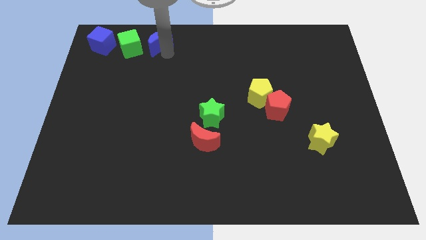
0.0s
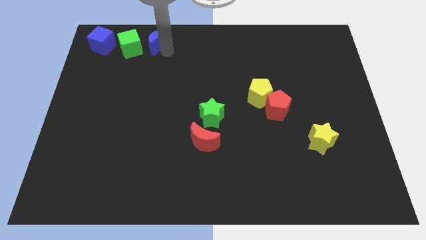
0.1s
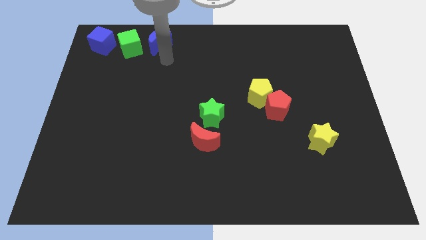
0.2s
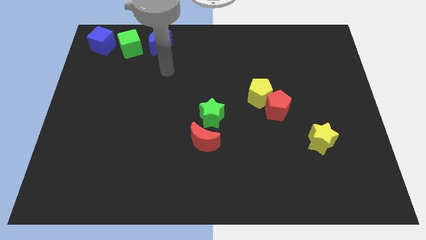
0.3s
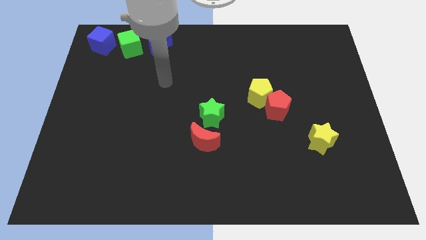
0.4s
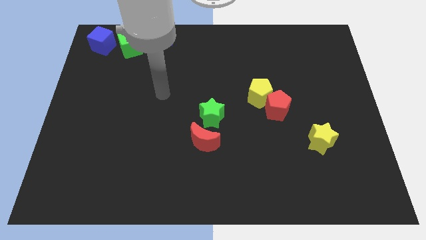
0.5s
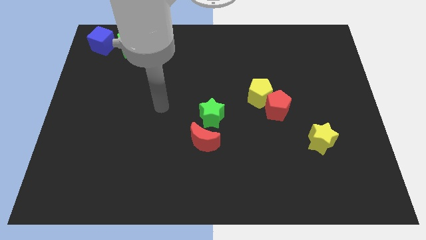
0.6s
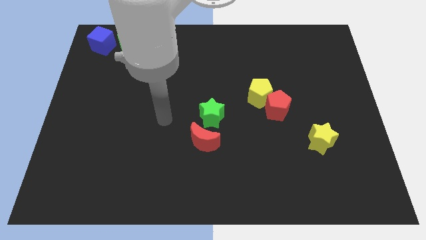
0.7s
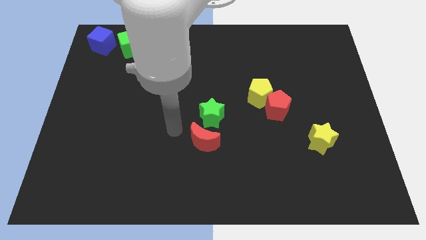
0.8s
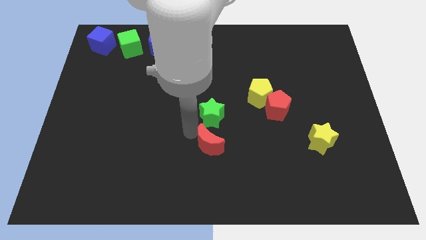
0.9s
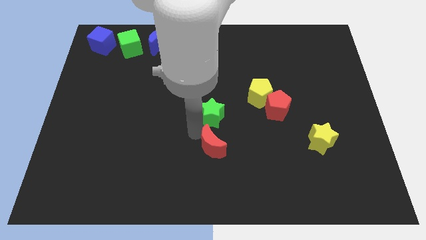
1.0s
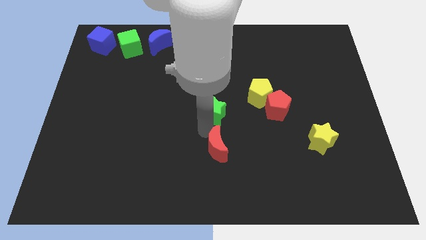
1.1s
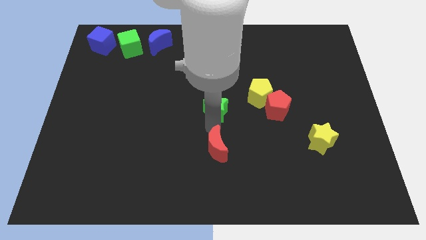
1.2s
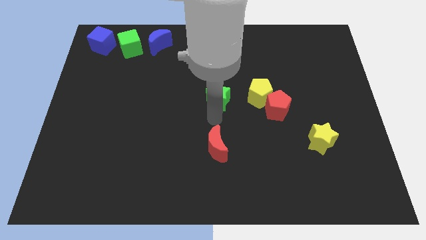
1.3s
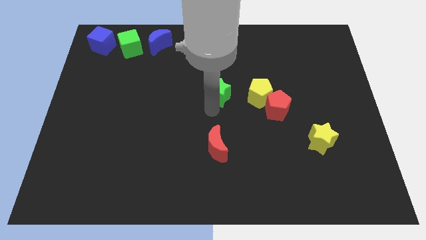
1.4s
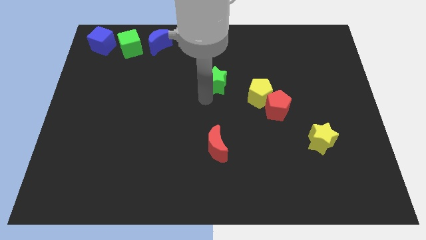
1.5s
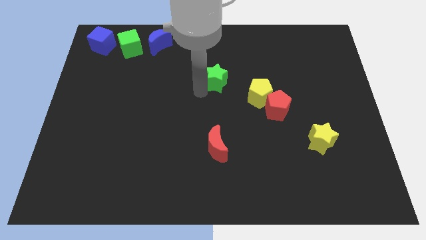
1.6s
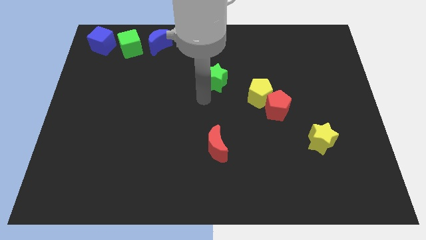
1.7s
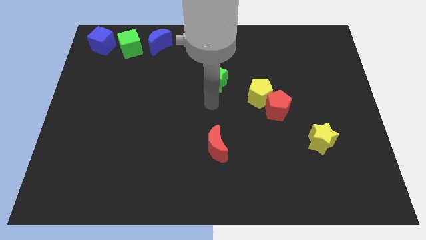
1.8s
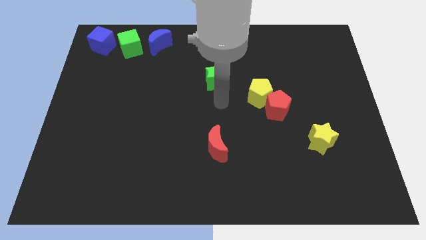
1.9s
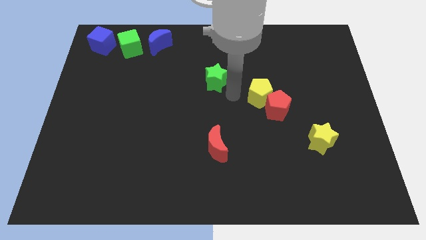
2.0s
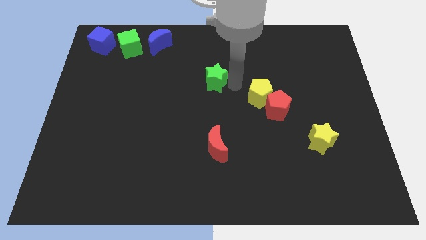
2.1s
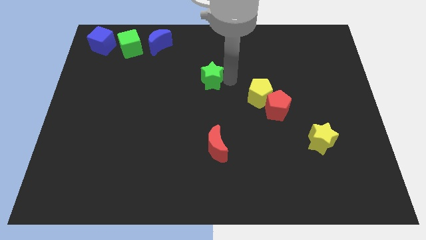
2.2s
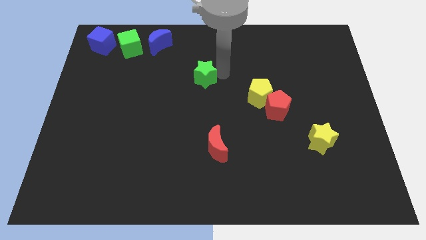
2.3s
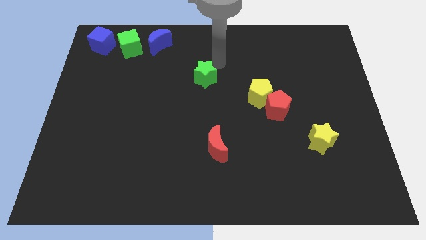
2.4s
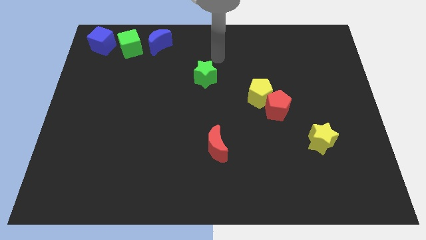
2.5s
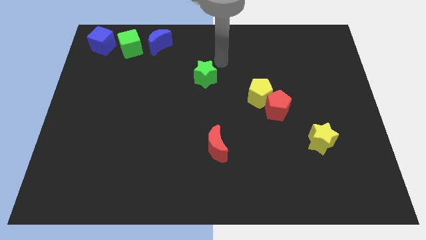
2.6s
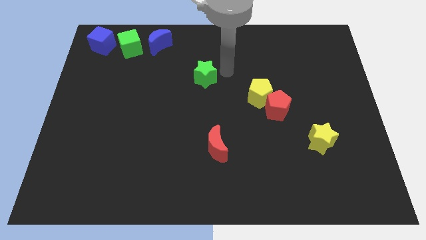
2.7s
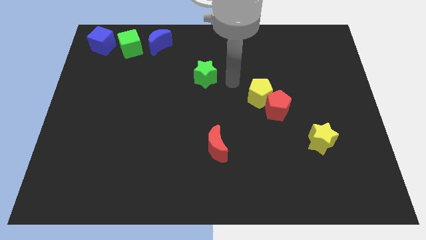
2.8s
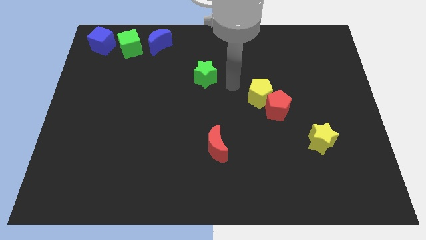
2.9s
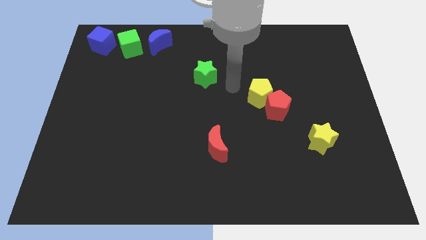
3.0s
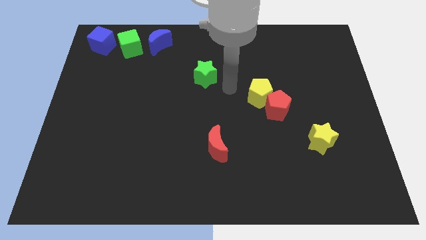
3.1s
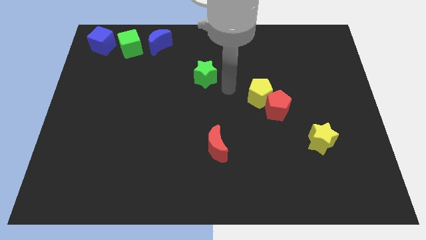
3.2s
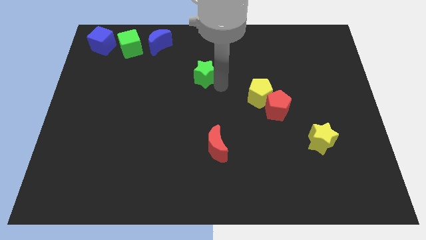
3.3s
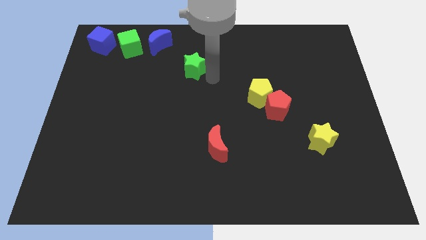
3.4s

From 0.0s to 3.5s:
move the green star slightly

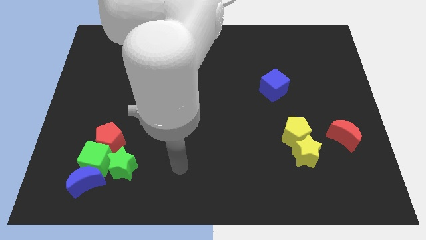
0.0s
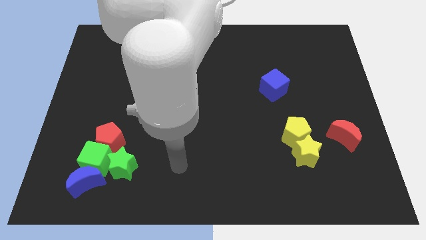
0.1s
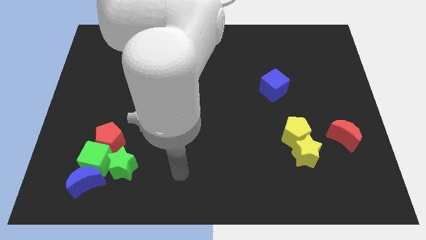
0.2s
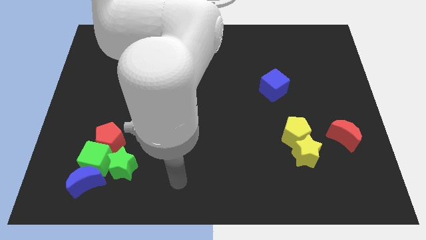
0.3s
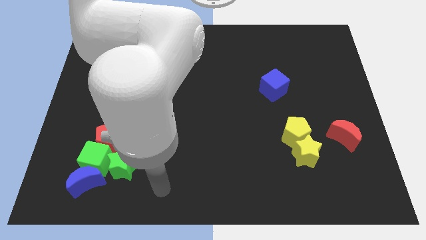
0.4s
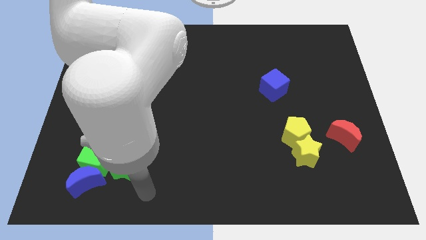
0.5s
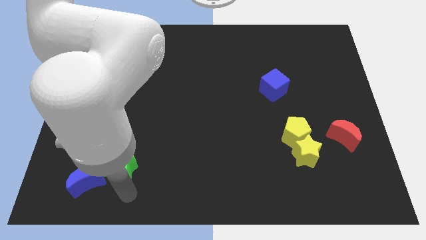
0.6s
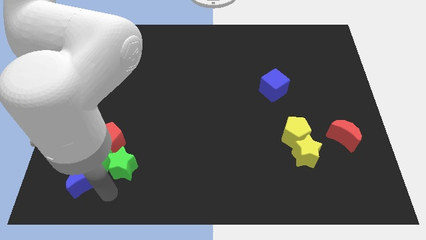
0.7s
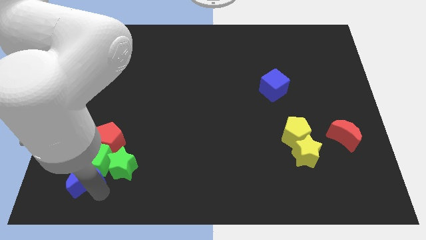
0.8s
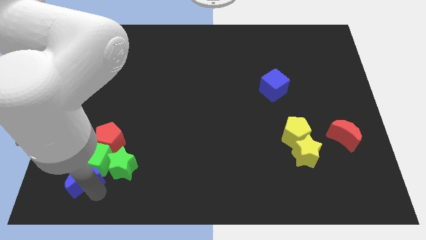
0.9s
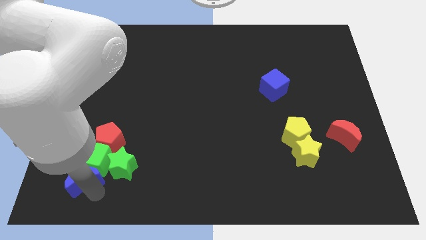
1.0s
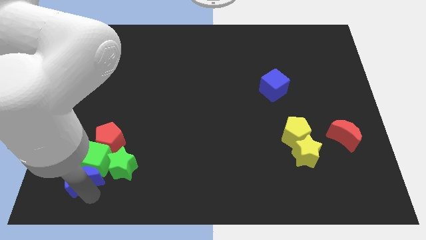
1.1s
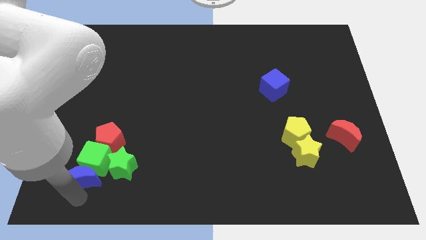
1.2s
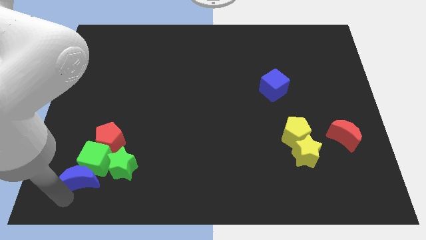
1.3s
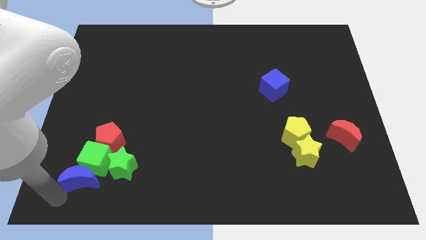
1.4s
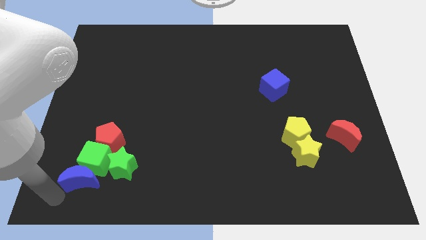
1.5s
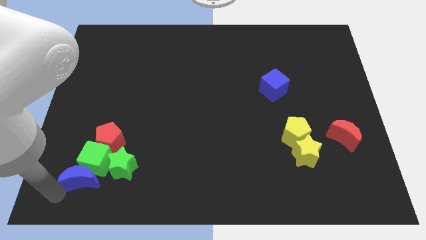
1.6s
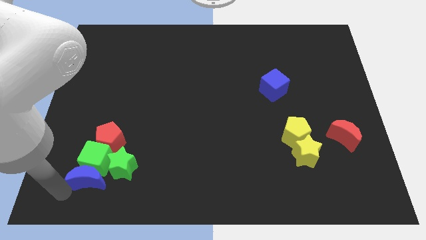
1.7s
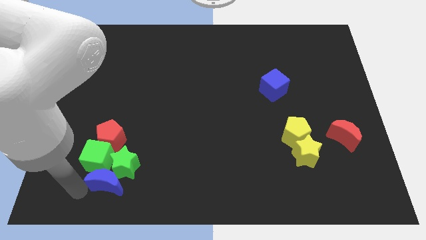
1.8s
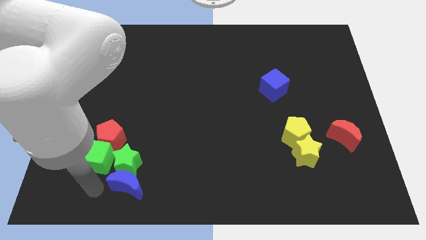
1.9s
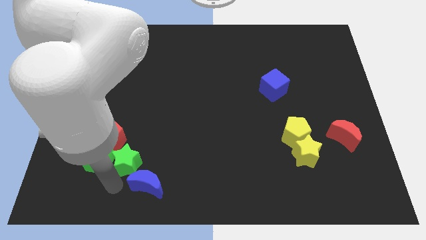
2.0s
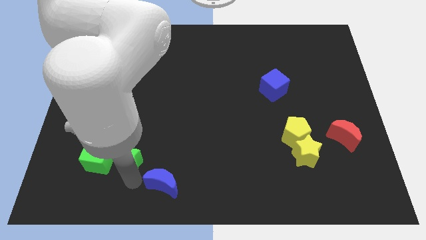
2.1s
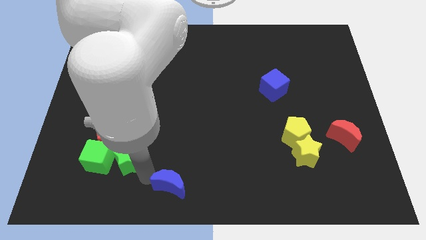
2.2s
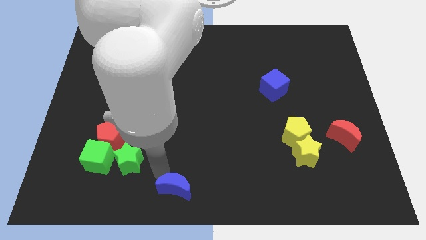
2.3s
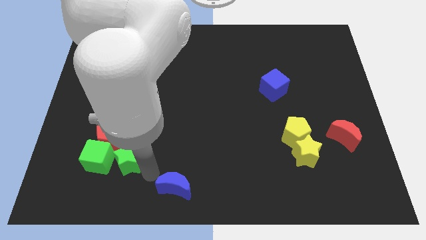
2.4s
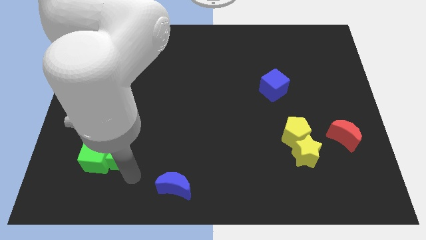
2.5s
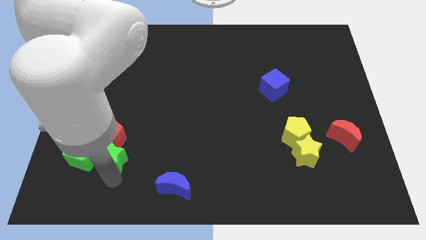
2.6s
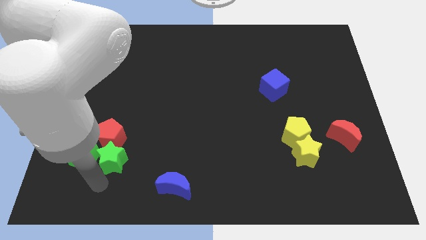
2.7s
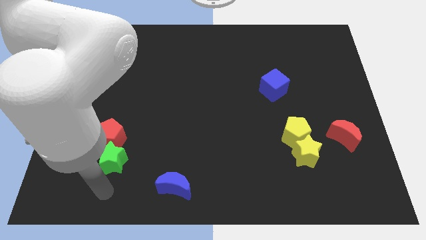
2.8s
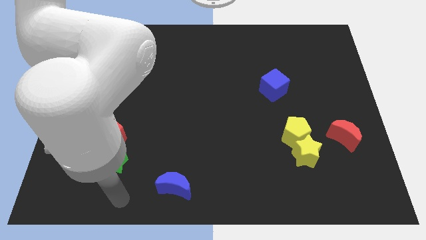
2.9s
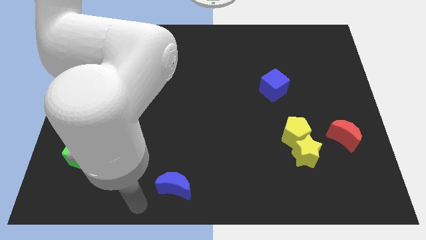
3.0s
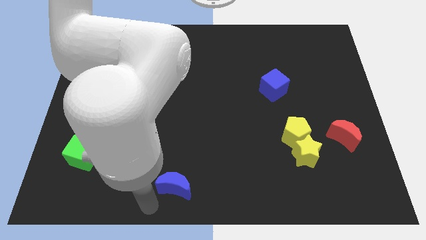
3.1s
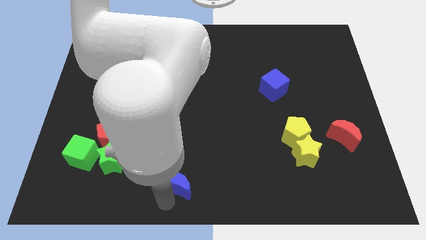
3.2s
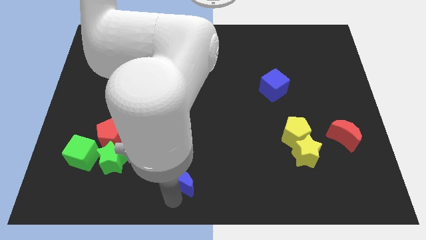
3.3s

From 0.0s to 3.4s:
separate blue moon from the group of blocks

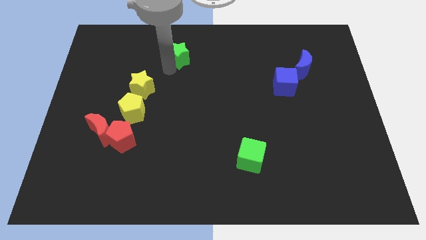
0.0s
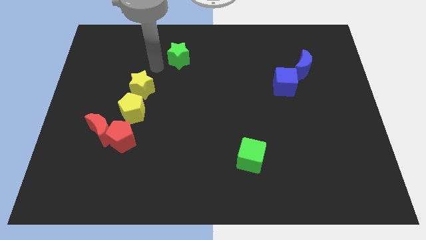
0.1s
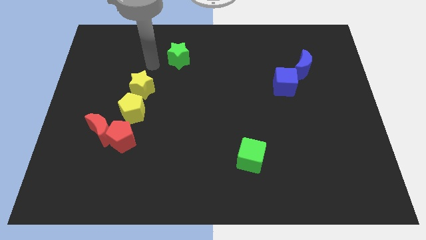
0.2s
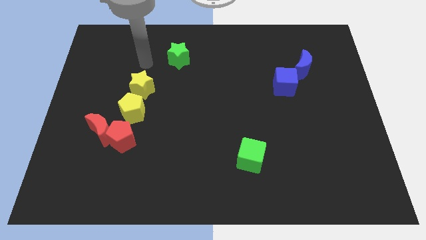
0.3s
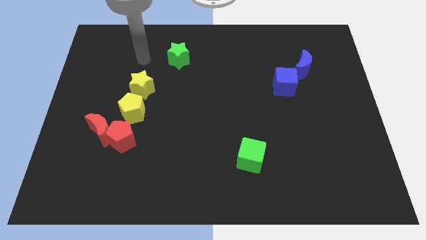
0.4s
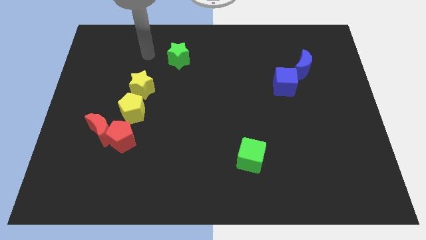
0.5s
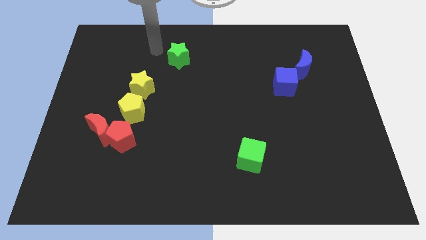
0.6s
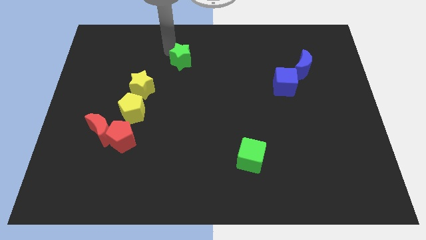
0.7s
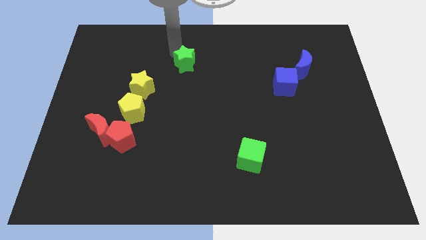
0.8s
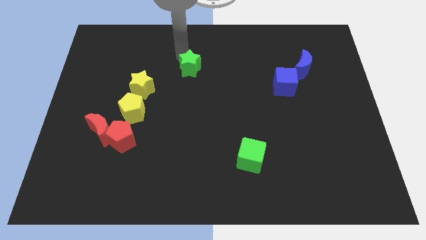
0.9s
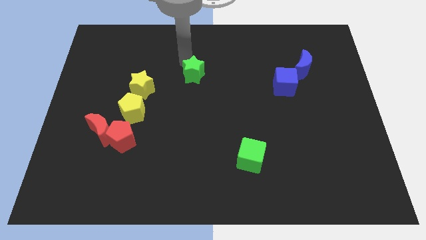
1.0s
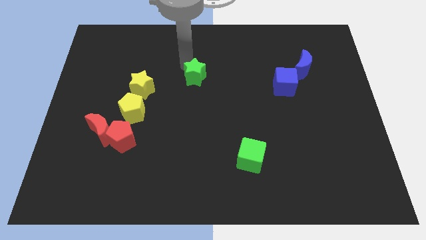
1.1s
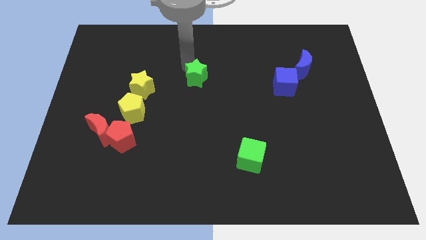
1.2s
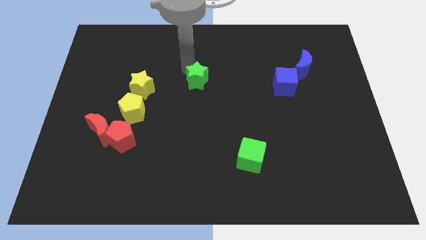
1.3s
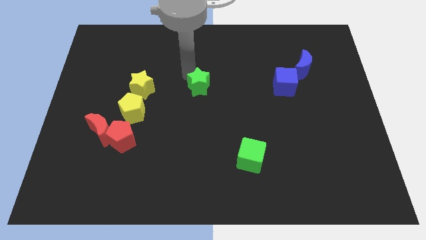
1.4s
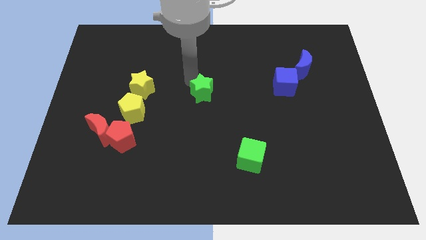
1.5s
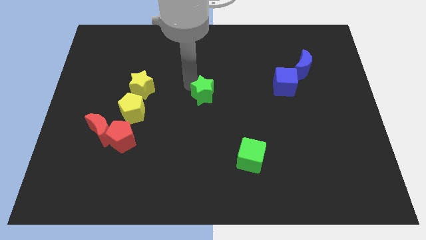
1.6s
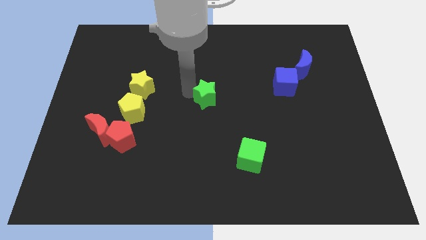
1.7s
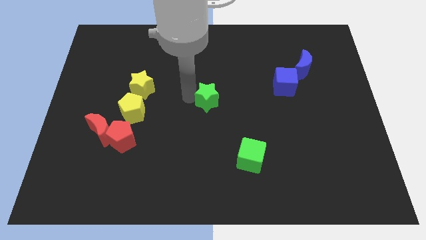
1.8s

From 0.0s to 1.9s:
place the green star at the center of the board

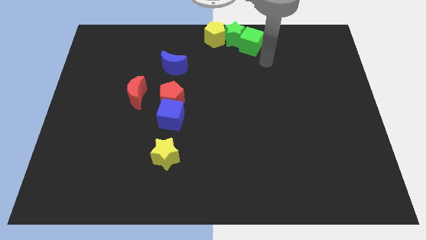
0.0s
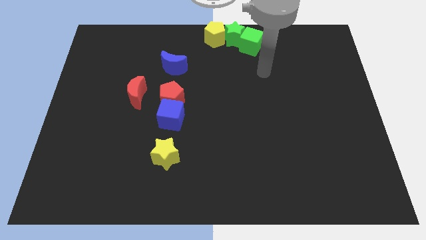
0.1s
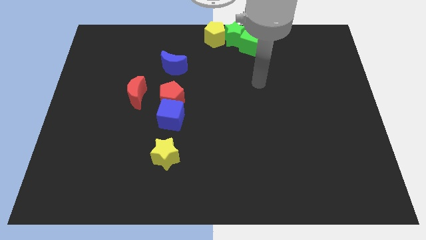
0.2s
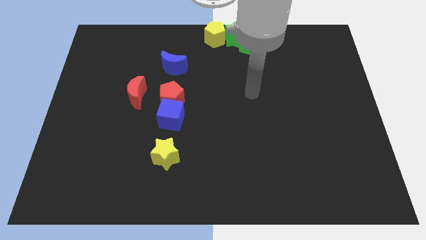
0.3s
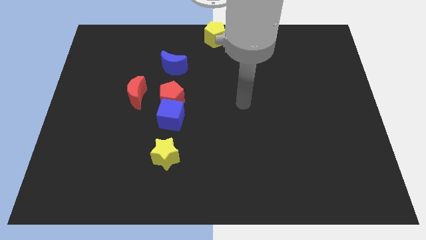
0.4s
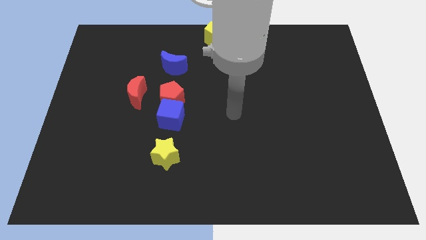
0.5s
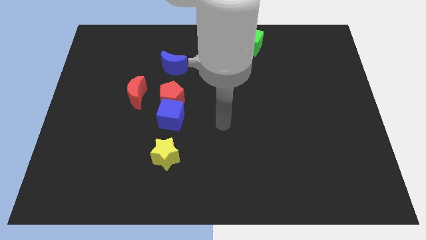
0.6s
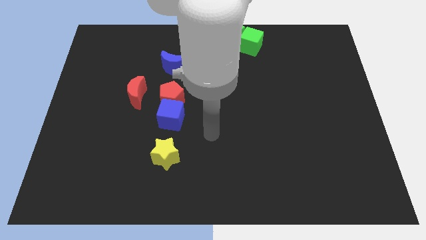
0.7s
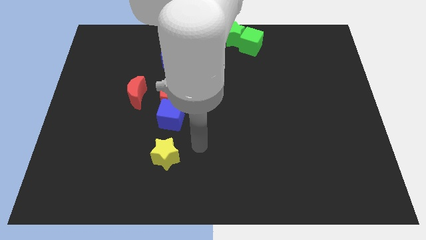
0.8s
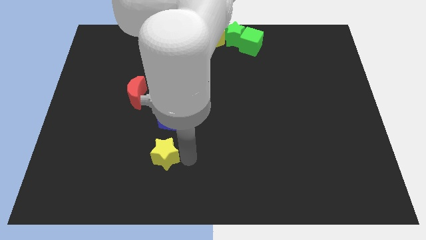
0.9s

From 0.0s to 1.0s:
move your arm to the right of the yellow star
